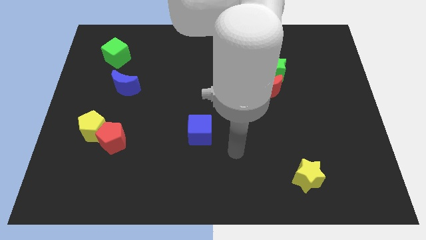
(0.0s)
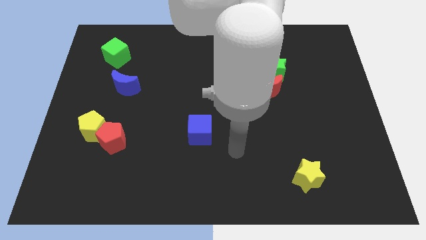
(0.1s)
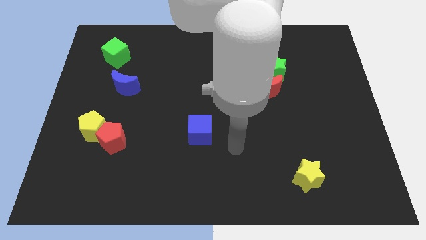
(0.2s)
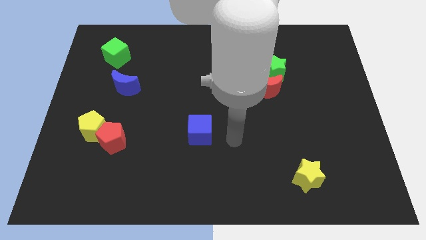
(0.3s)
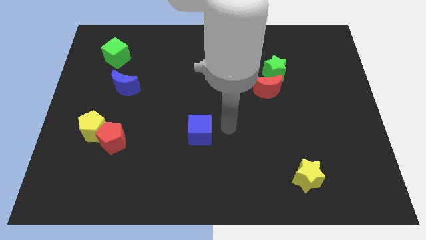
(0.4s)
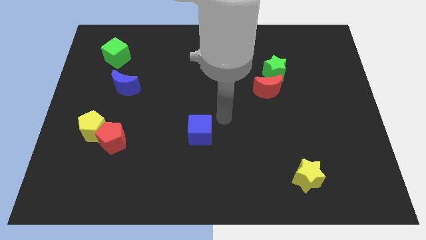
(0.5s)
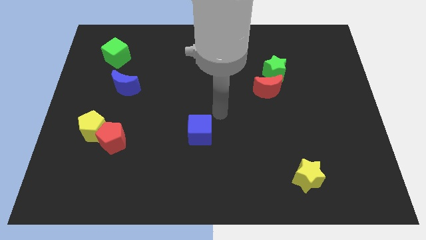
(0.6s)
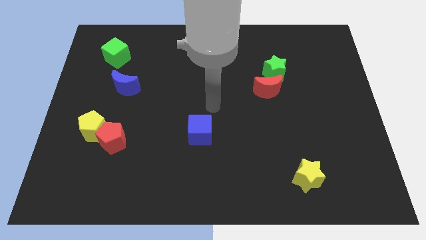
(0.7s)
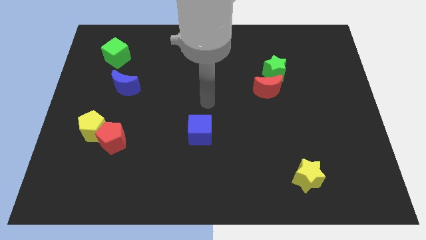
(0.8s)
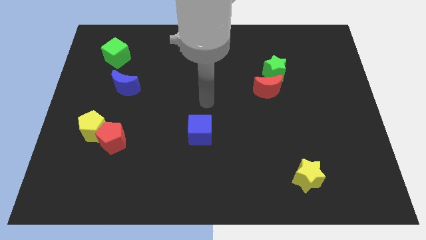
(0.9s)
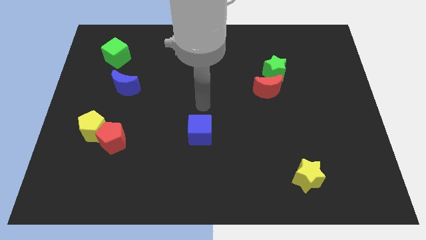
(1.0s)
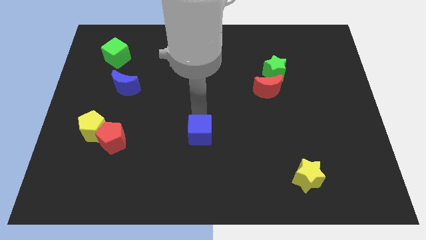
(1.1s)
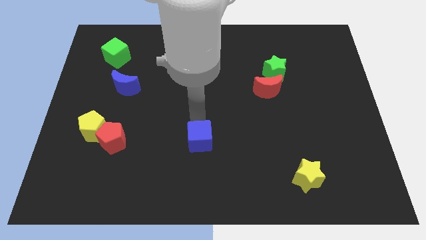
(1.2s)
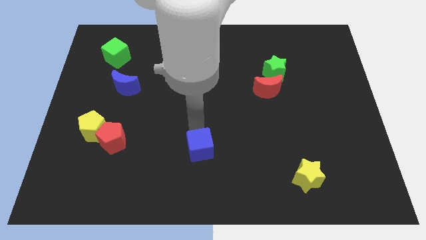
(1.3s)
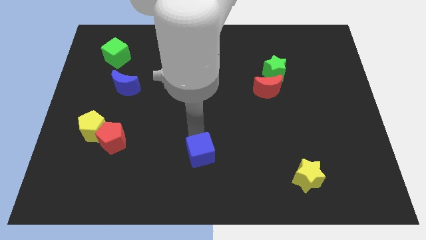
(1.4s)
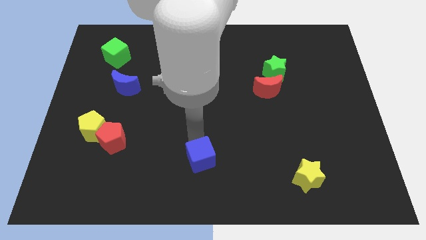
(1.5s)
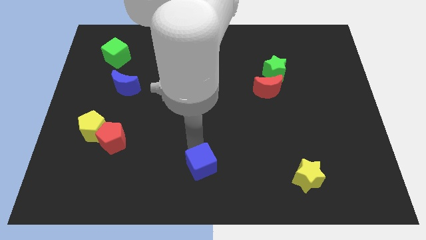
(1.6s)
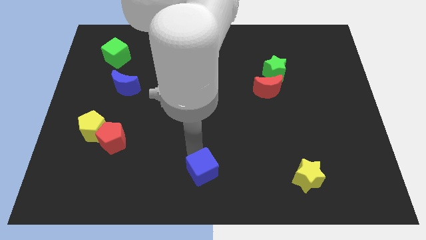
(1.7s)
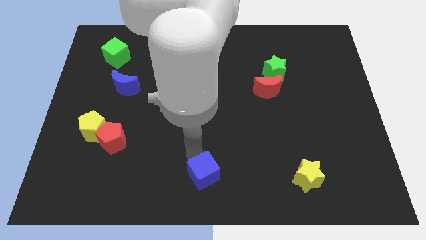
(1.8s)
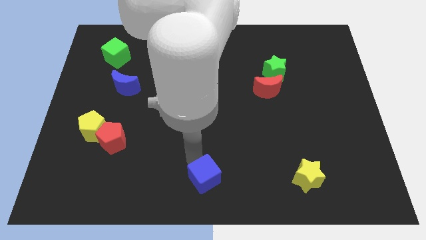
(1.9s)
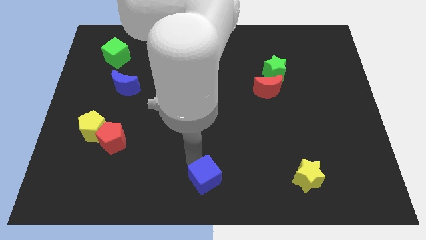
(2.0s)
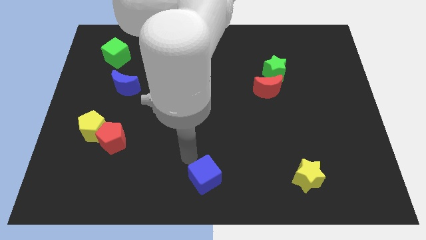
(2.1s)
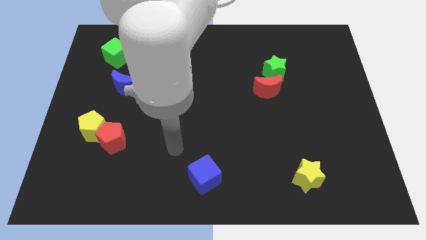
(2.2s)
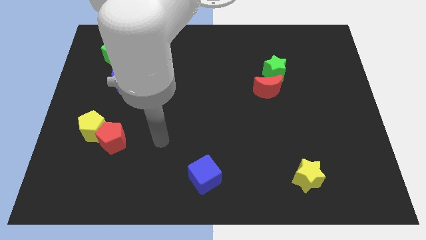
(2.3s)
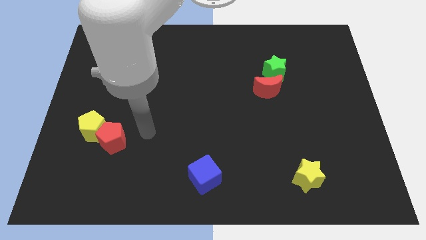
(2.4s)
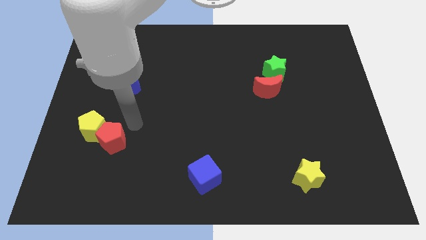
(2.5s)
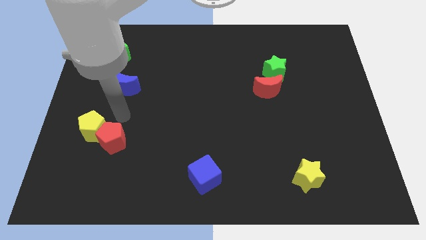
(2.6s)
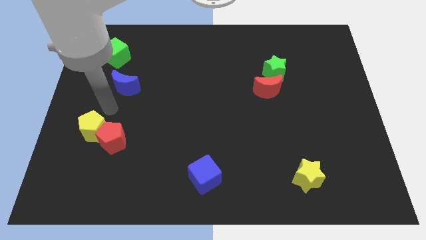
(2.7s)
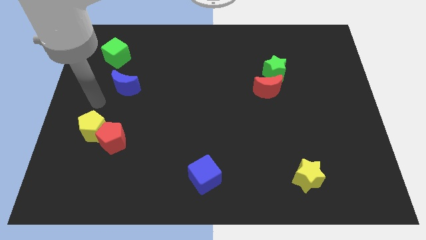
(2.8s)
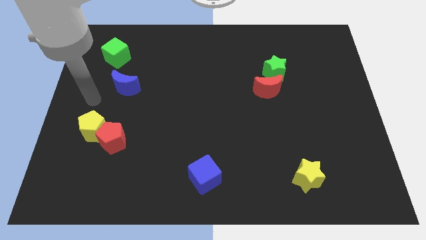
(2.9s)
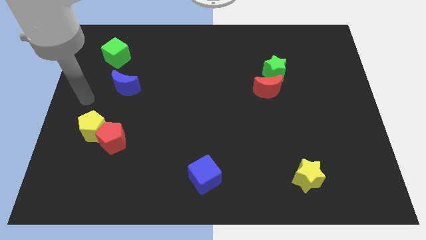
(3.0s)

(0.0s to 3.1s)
push the blue cube slightly towards down

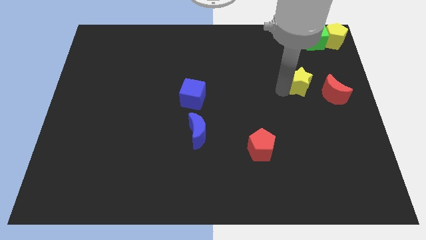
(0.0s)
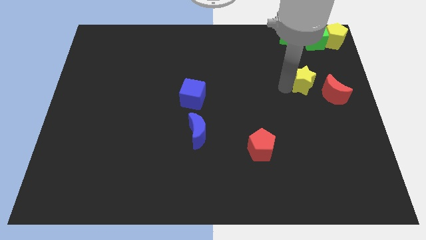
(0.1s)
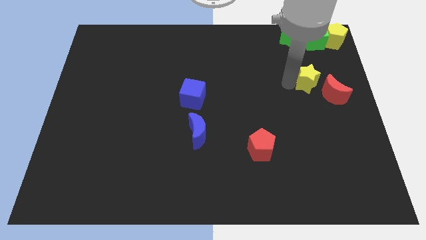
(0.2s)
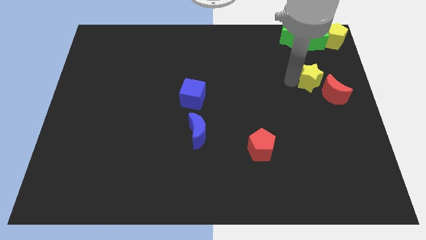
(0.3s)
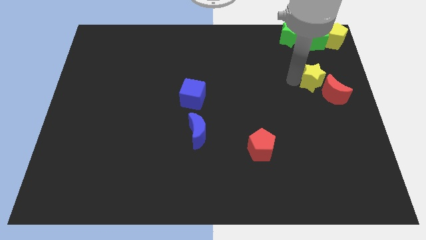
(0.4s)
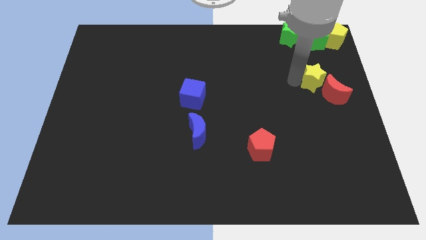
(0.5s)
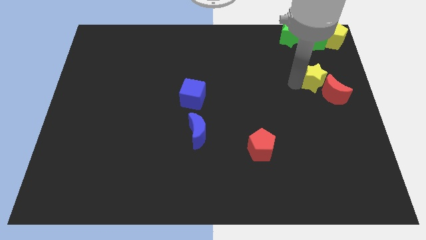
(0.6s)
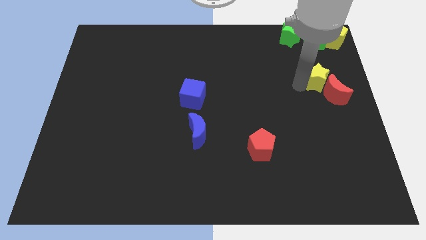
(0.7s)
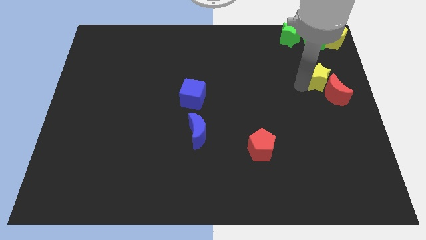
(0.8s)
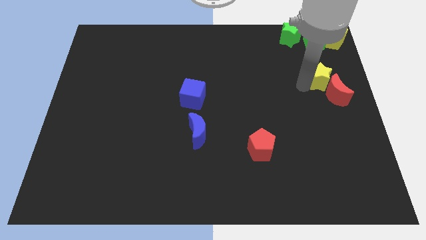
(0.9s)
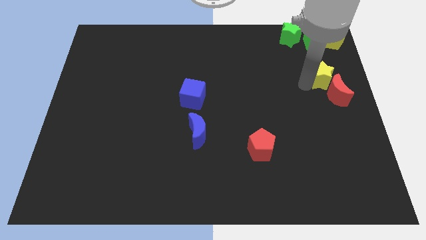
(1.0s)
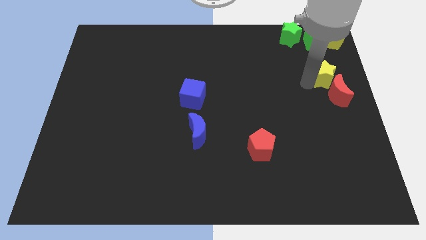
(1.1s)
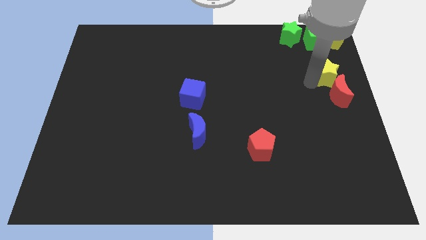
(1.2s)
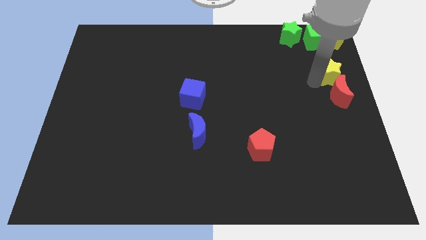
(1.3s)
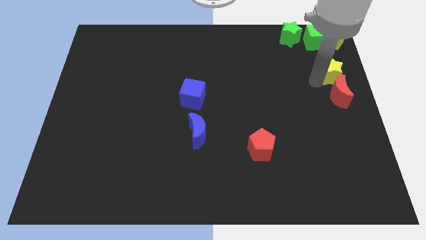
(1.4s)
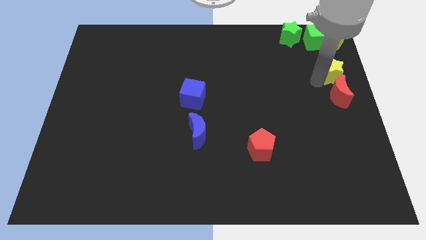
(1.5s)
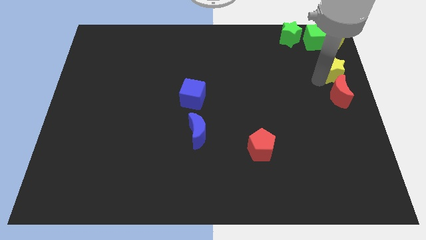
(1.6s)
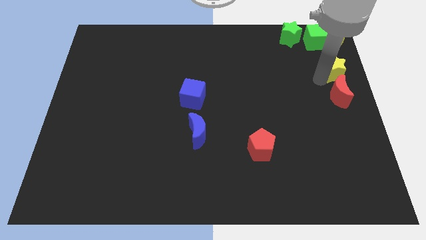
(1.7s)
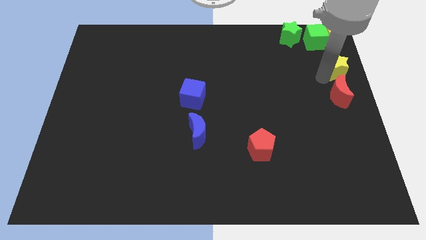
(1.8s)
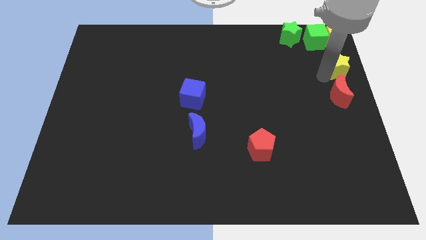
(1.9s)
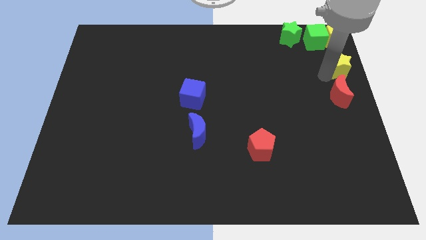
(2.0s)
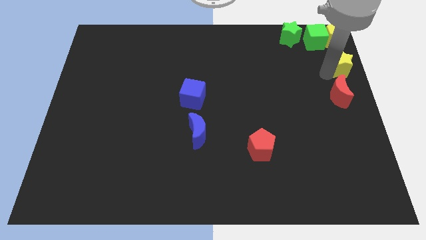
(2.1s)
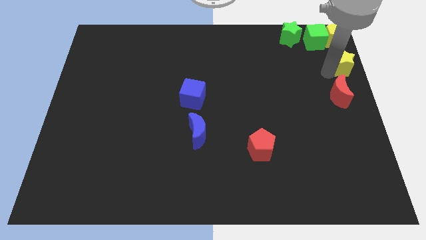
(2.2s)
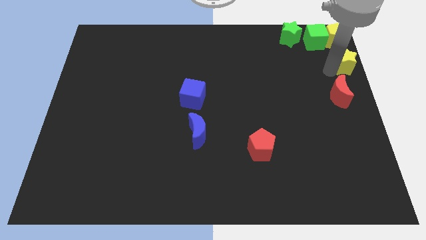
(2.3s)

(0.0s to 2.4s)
place the yellow star above the red crescent

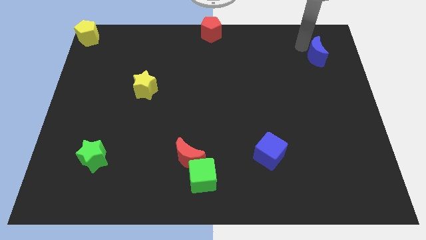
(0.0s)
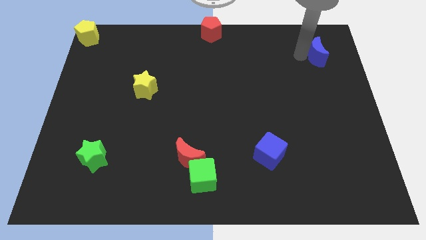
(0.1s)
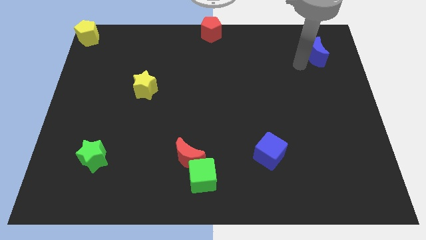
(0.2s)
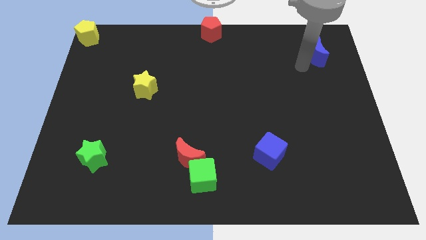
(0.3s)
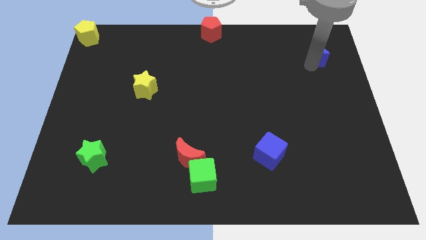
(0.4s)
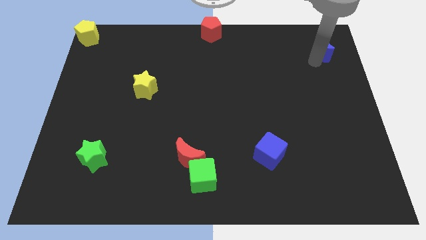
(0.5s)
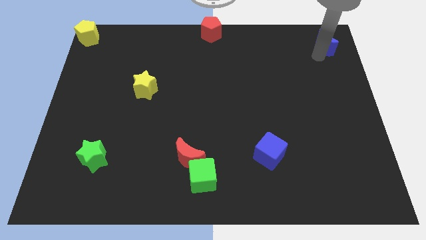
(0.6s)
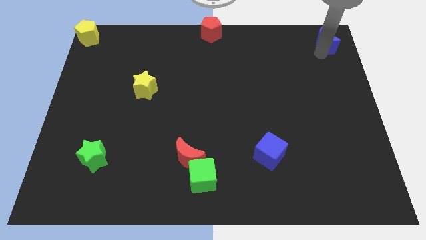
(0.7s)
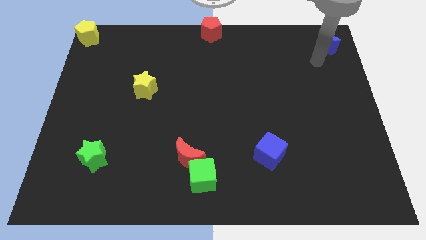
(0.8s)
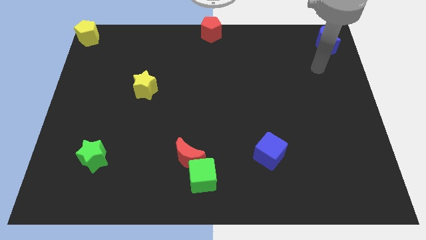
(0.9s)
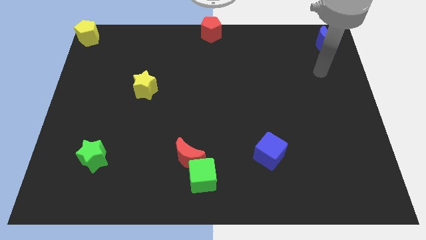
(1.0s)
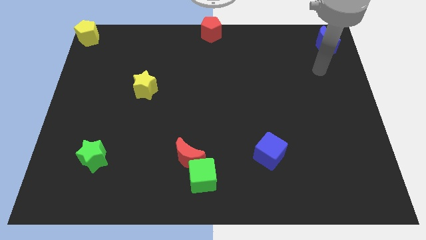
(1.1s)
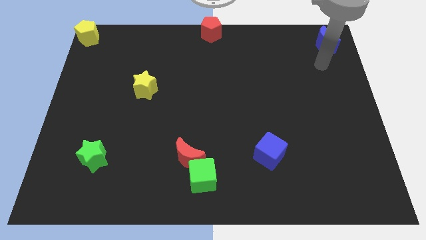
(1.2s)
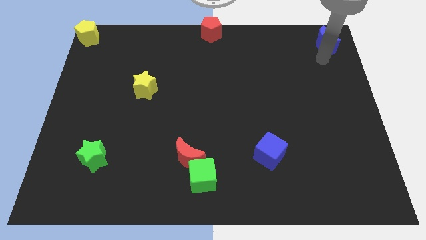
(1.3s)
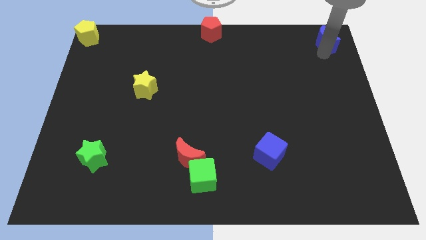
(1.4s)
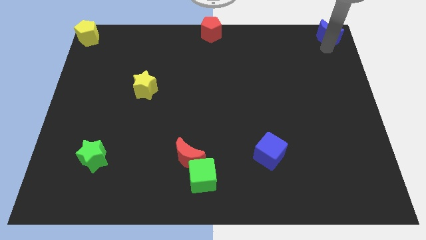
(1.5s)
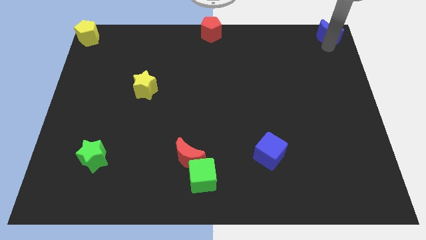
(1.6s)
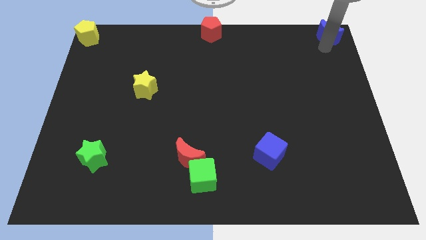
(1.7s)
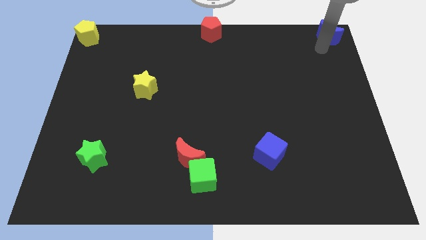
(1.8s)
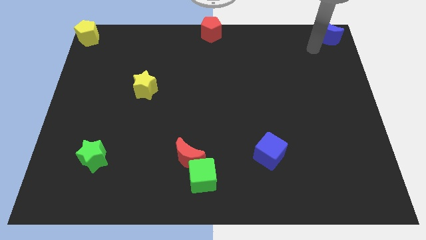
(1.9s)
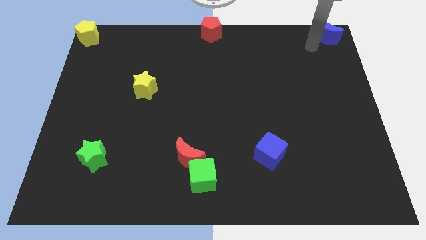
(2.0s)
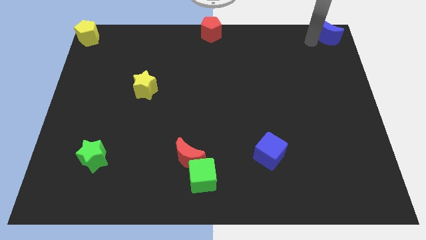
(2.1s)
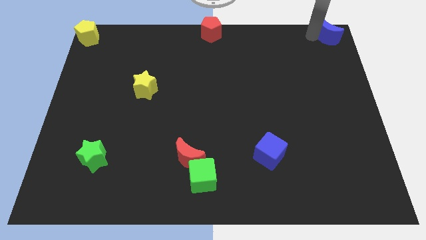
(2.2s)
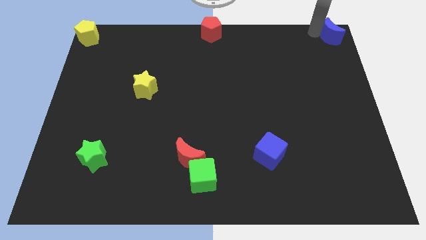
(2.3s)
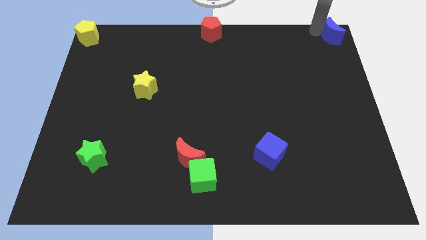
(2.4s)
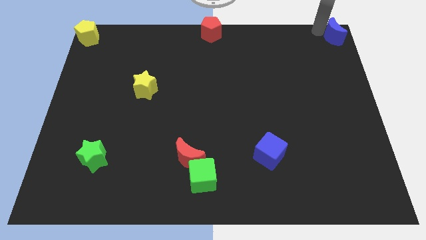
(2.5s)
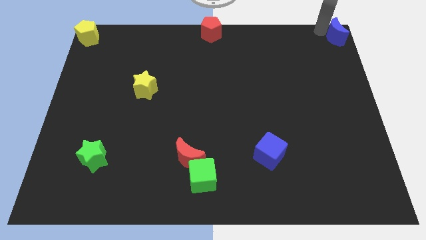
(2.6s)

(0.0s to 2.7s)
place the blue crescent at the top right corner of the board

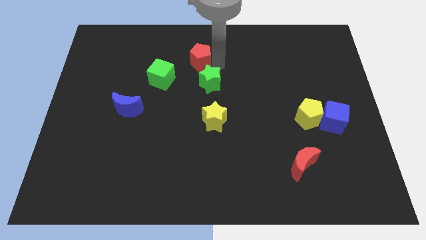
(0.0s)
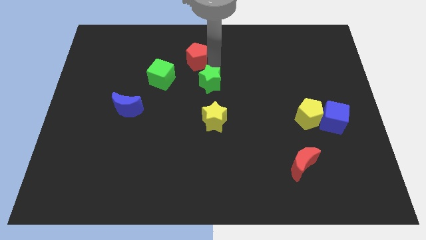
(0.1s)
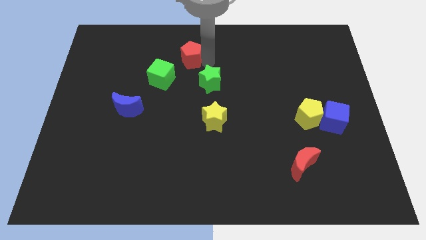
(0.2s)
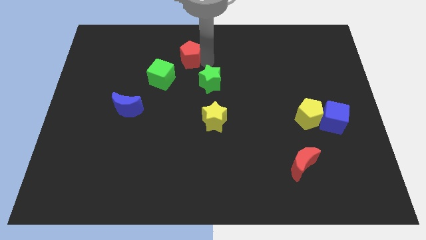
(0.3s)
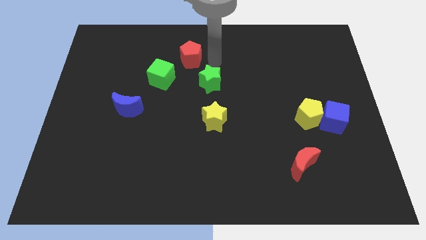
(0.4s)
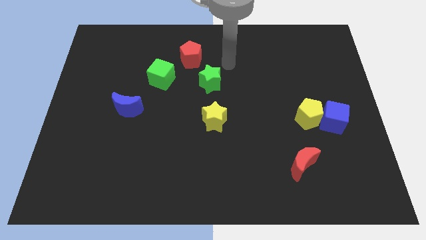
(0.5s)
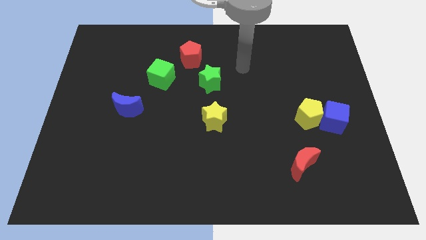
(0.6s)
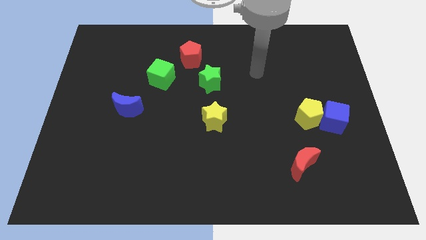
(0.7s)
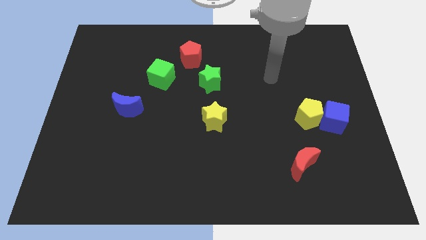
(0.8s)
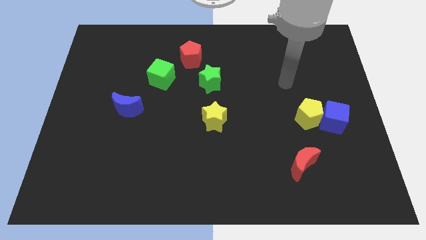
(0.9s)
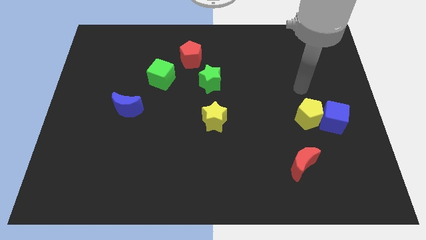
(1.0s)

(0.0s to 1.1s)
make a triangle by placing red pentagon above green blocks
